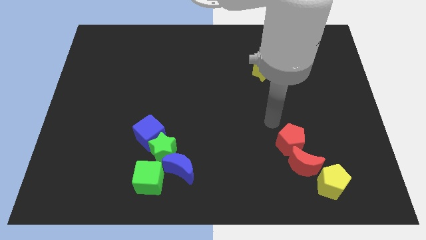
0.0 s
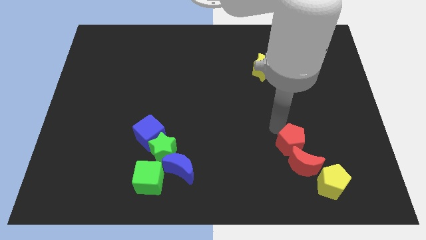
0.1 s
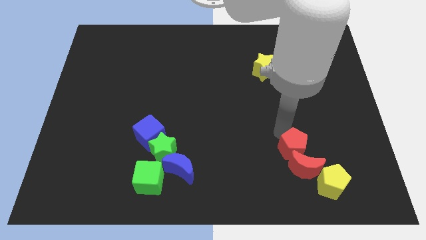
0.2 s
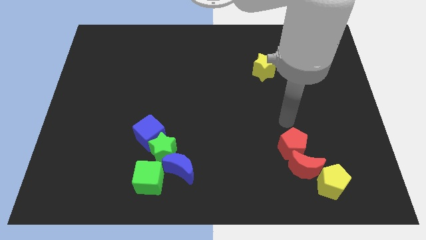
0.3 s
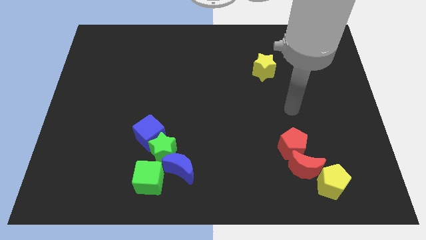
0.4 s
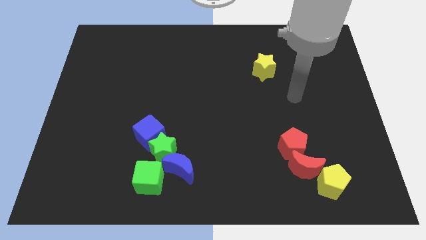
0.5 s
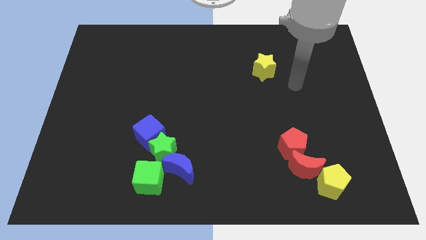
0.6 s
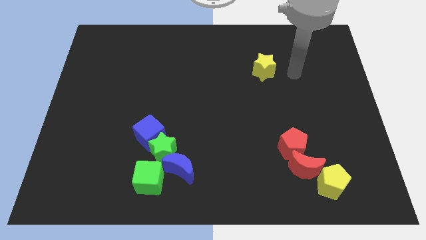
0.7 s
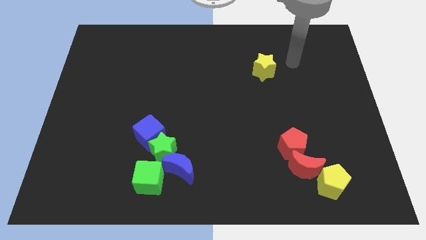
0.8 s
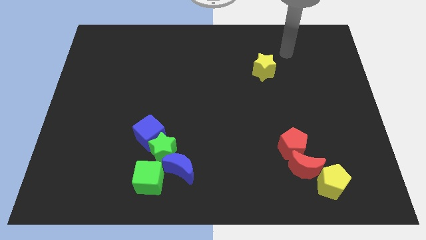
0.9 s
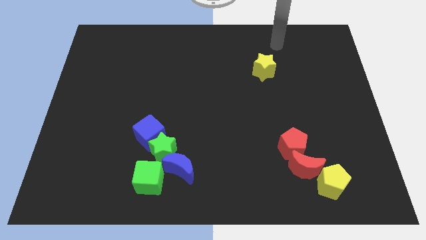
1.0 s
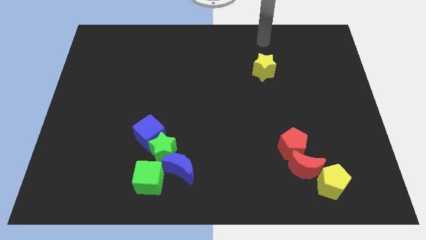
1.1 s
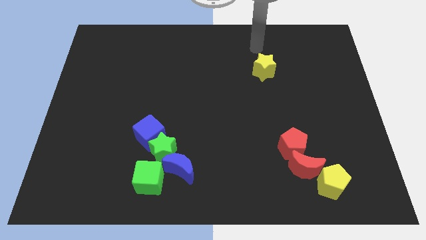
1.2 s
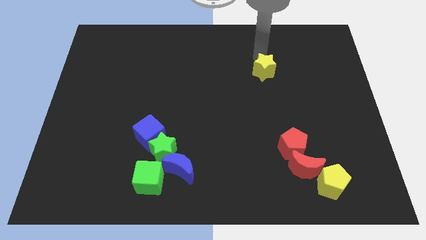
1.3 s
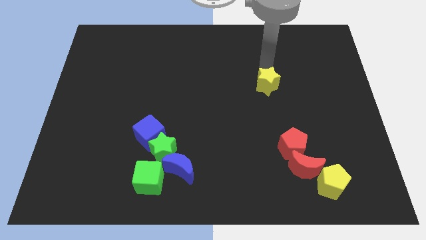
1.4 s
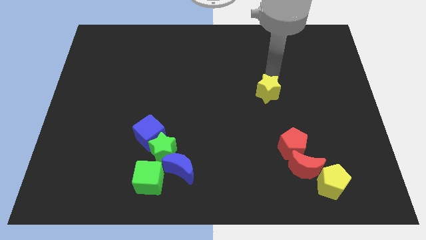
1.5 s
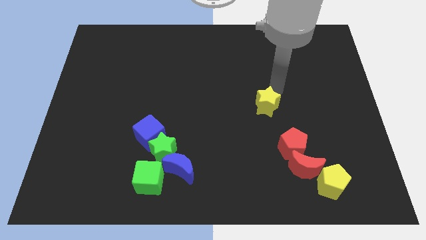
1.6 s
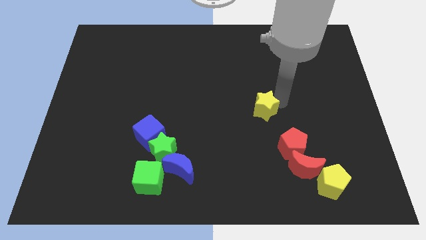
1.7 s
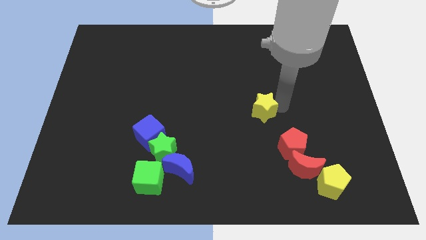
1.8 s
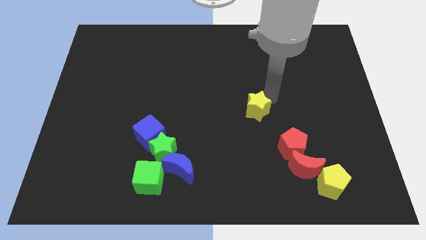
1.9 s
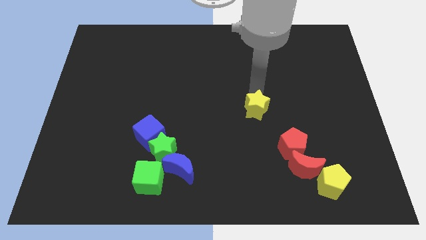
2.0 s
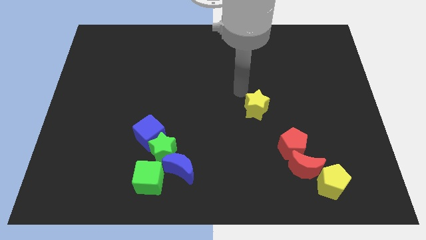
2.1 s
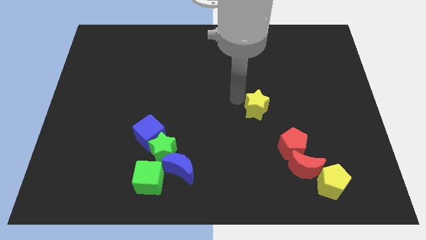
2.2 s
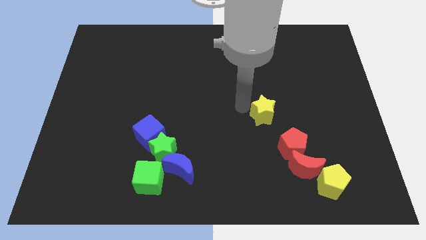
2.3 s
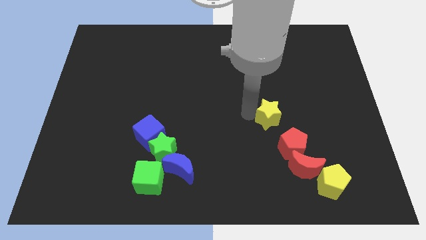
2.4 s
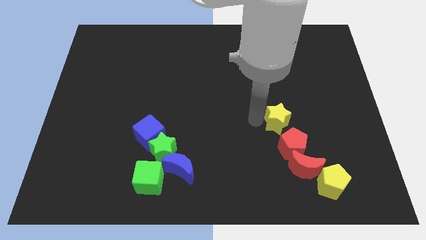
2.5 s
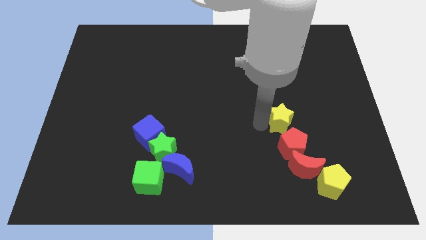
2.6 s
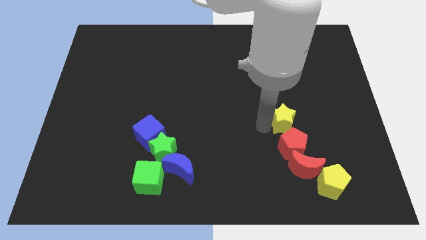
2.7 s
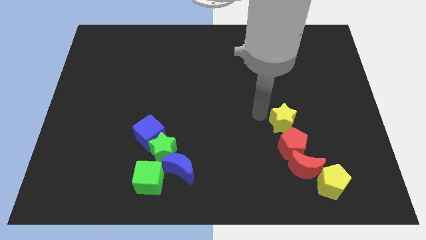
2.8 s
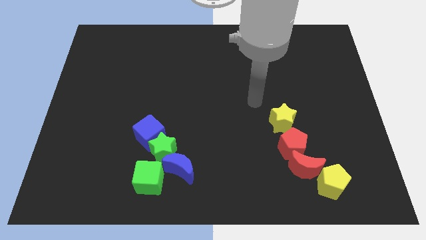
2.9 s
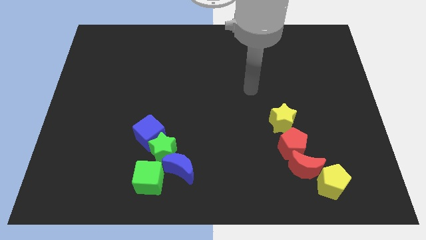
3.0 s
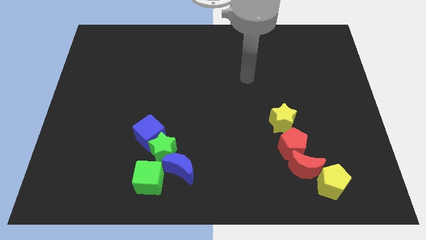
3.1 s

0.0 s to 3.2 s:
push the yellow star to the top of the red pentagon

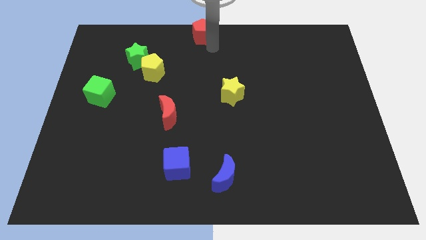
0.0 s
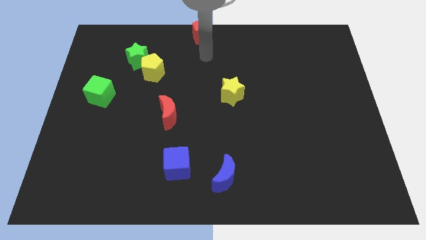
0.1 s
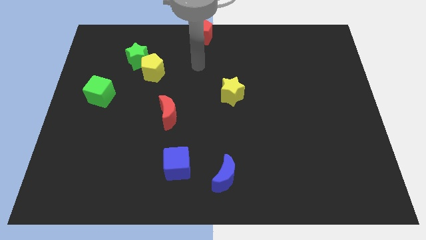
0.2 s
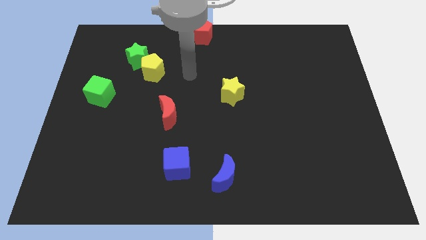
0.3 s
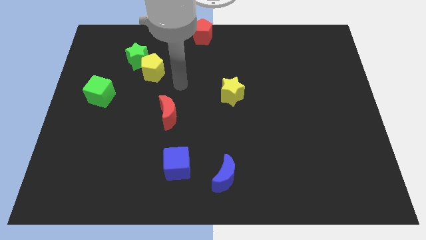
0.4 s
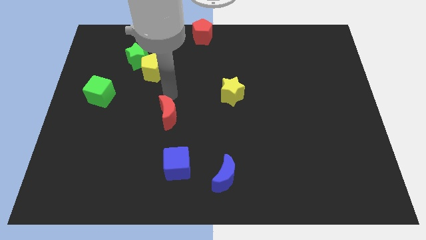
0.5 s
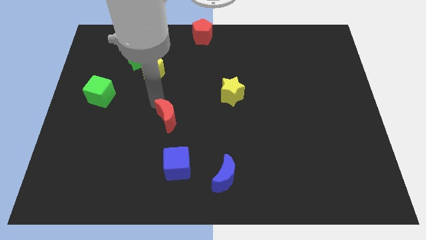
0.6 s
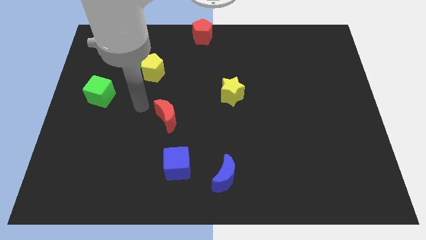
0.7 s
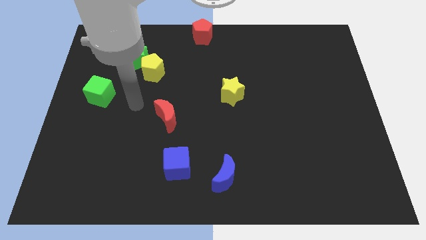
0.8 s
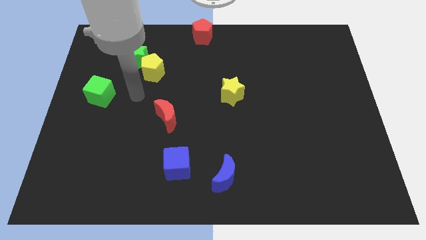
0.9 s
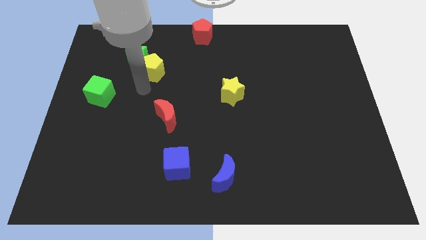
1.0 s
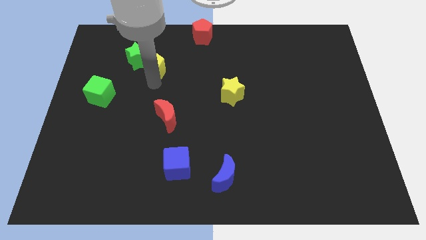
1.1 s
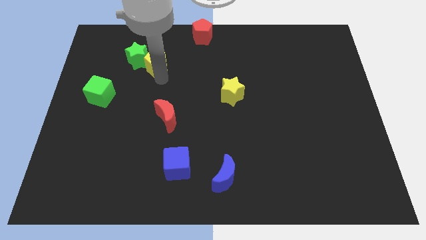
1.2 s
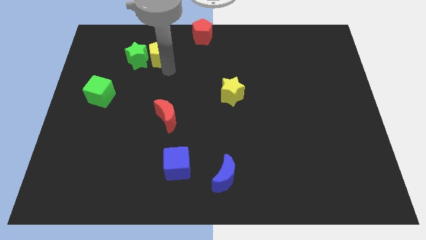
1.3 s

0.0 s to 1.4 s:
push the yellow pentagon to the right of the green star

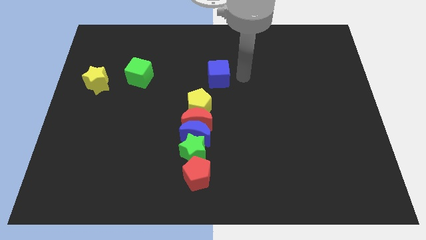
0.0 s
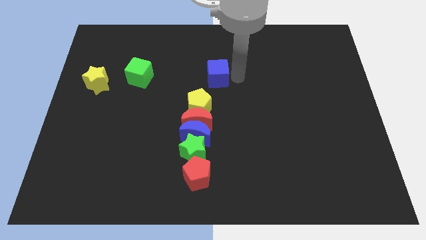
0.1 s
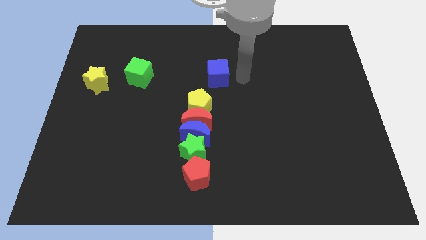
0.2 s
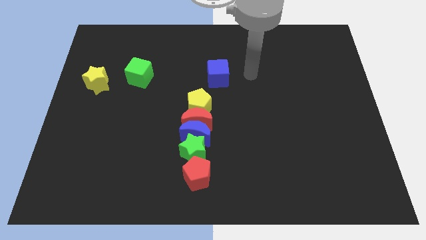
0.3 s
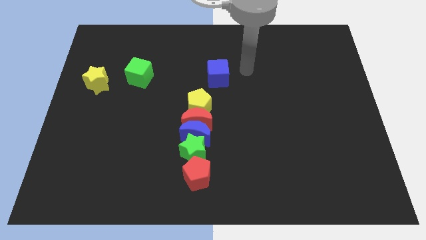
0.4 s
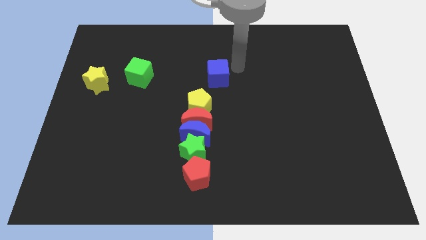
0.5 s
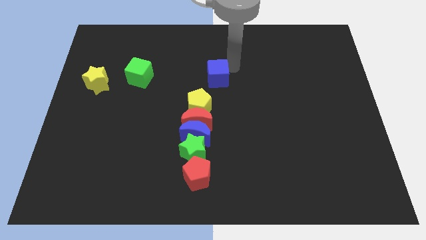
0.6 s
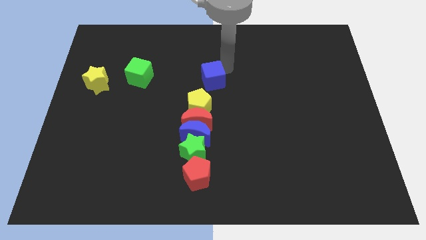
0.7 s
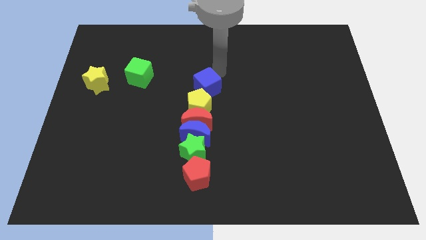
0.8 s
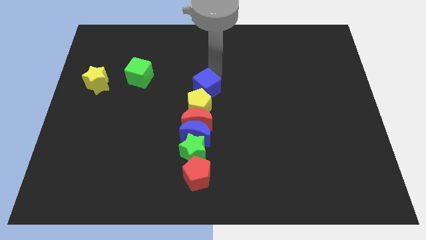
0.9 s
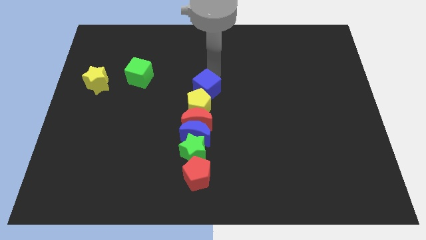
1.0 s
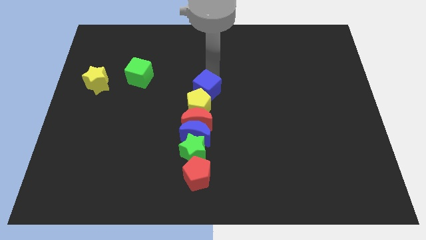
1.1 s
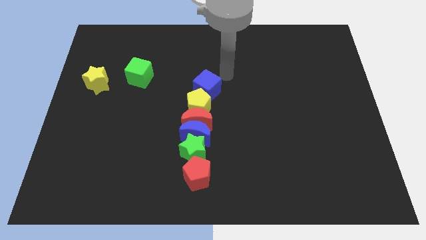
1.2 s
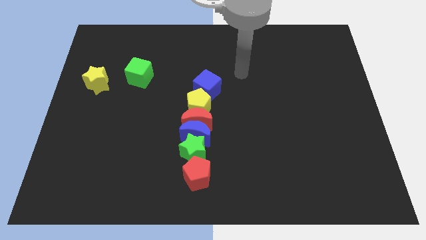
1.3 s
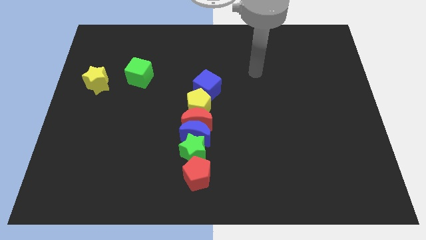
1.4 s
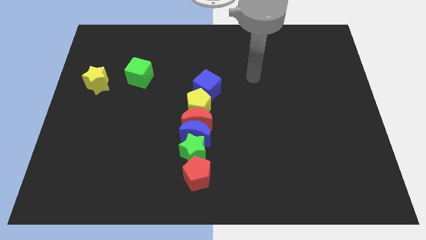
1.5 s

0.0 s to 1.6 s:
push the blue cube vertically above the yellow pentagon

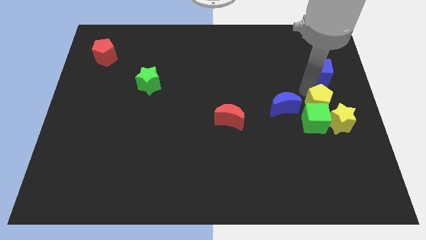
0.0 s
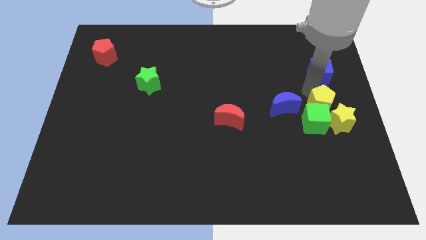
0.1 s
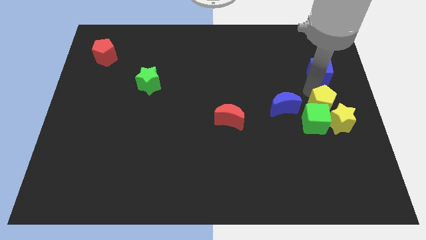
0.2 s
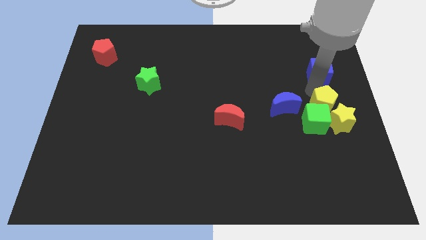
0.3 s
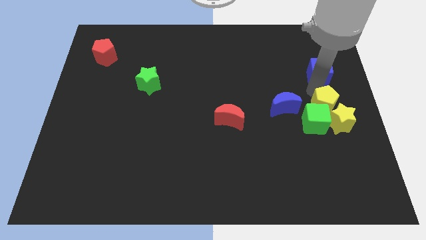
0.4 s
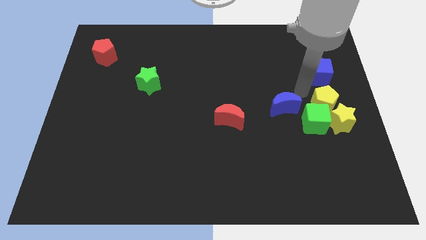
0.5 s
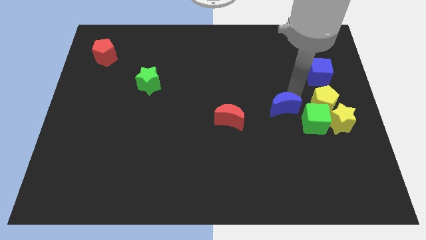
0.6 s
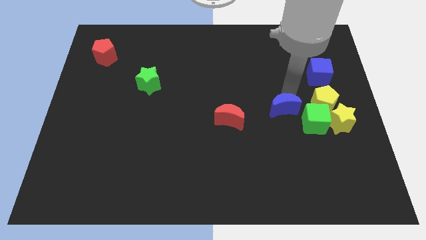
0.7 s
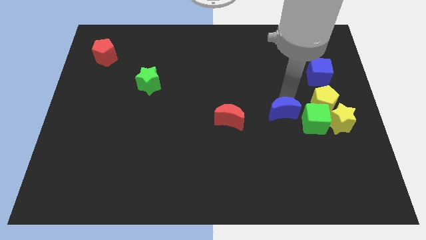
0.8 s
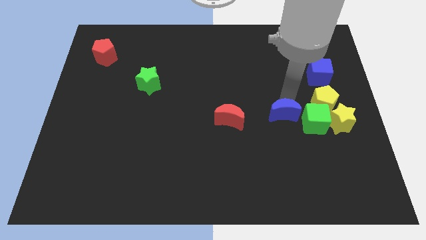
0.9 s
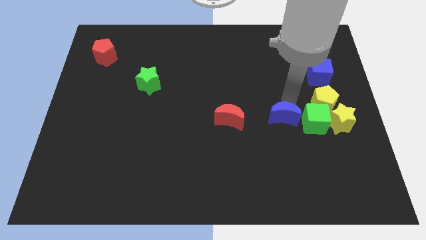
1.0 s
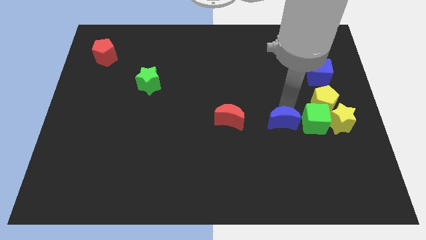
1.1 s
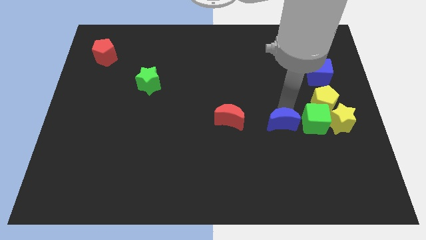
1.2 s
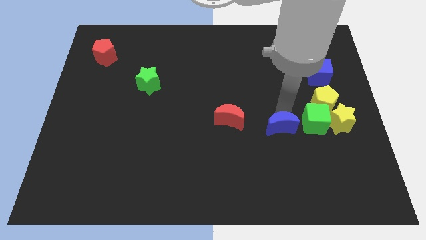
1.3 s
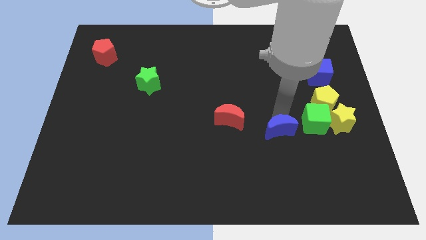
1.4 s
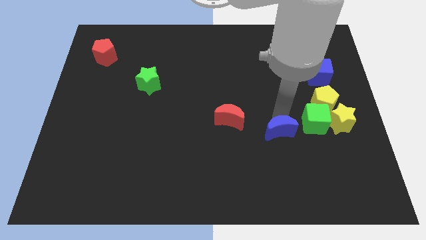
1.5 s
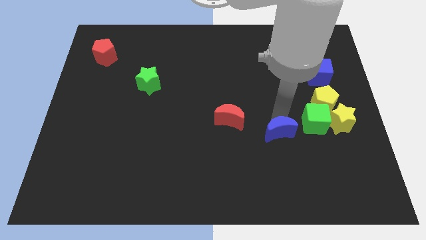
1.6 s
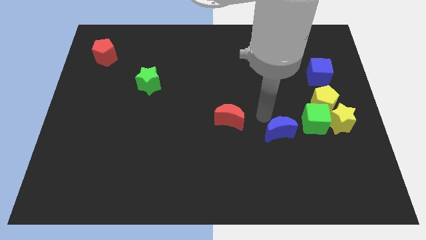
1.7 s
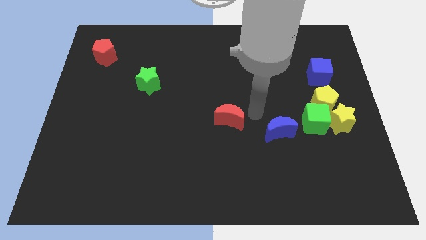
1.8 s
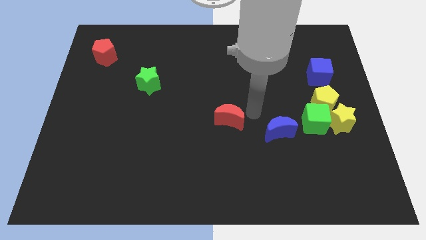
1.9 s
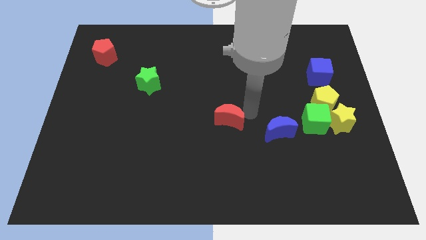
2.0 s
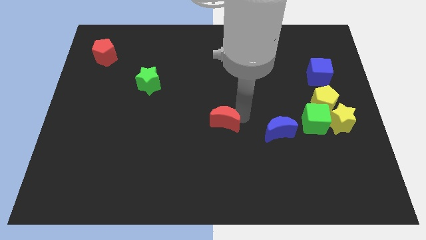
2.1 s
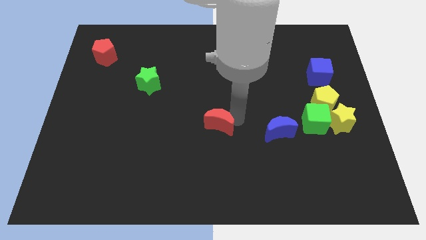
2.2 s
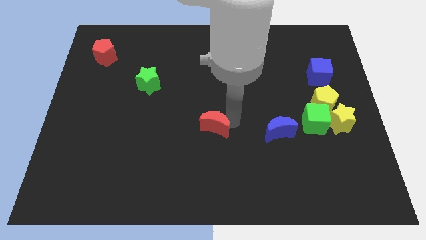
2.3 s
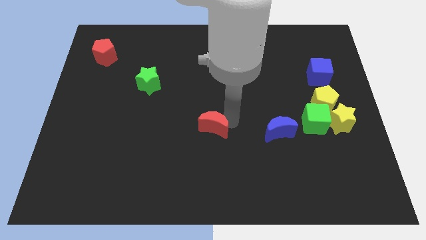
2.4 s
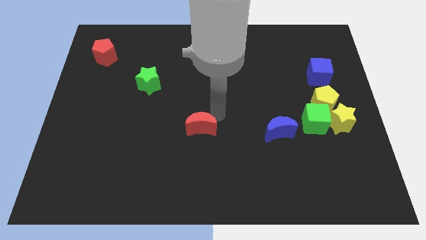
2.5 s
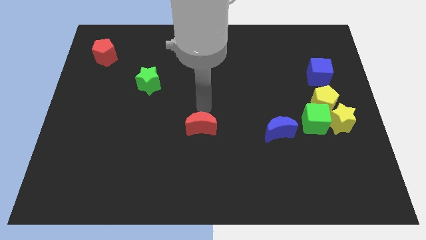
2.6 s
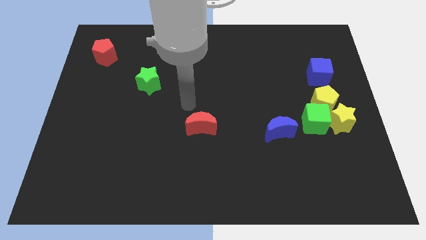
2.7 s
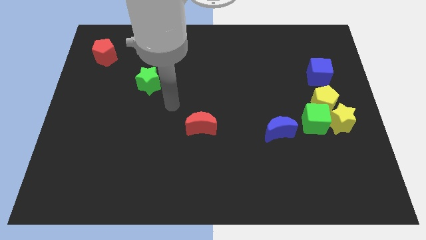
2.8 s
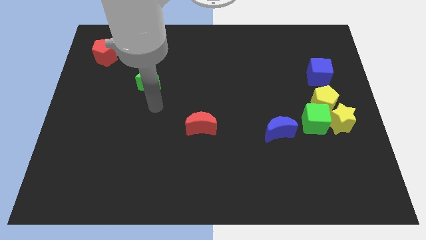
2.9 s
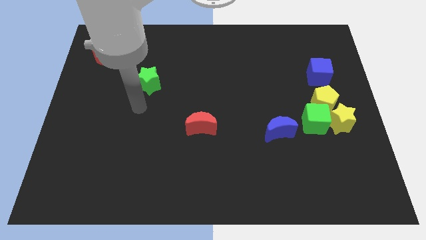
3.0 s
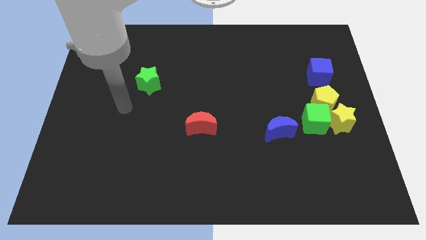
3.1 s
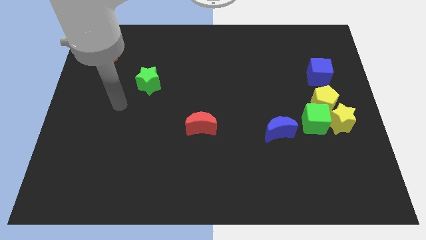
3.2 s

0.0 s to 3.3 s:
arrange the blue moon and red moon in a horizontal line at the left side of the green cube
